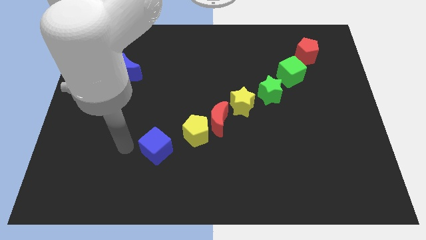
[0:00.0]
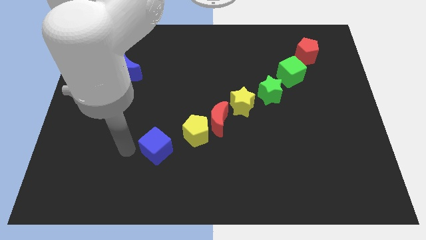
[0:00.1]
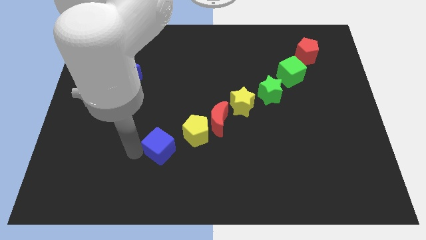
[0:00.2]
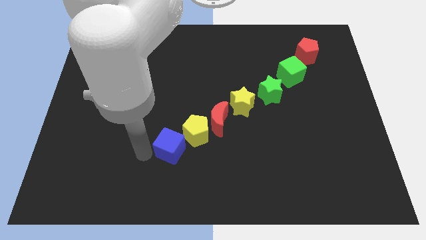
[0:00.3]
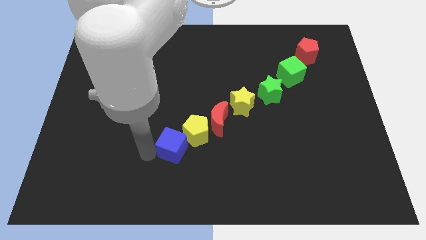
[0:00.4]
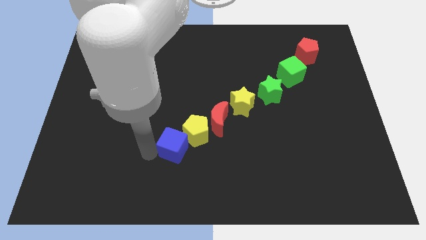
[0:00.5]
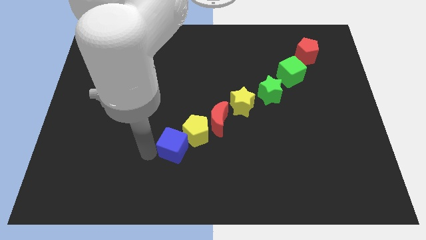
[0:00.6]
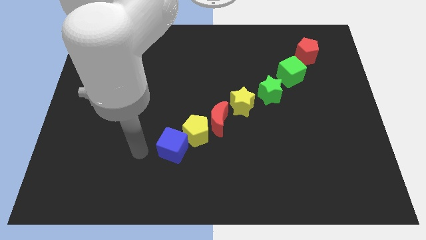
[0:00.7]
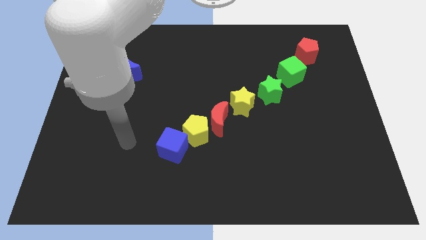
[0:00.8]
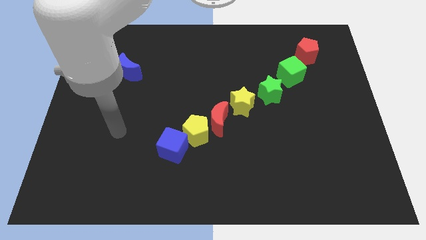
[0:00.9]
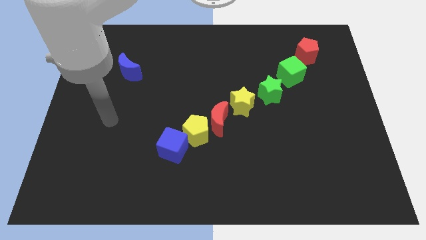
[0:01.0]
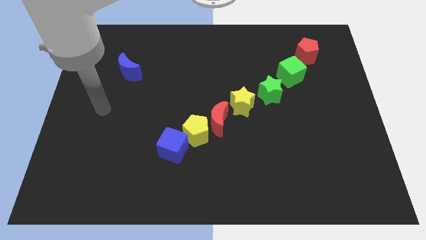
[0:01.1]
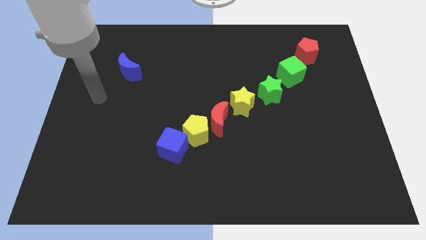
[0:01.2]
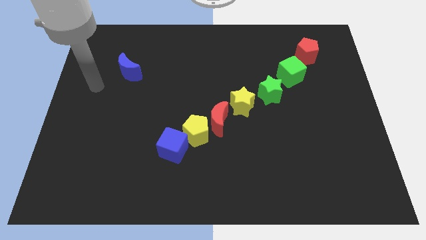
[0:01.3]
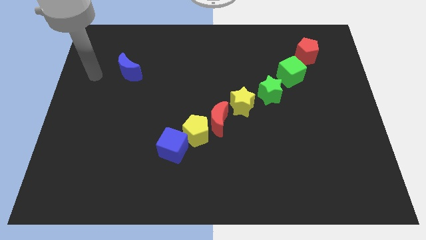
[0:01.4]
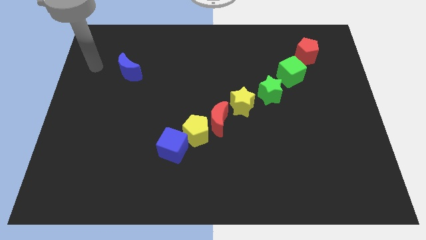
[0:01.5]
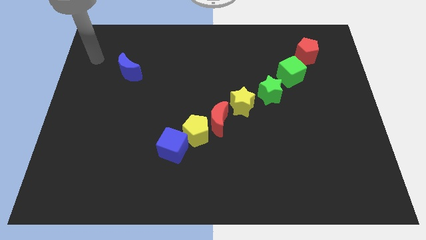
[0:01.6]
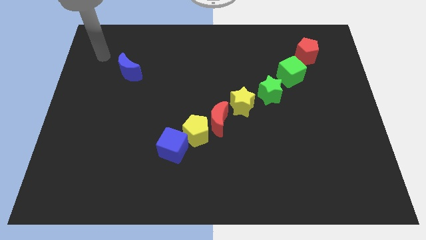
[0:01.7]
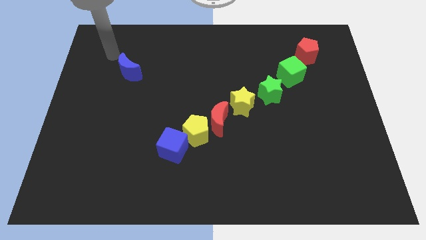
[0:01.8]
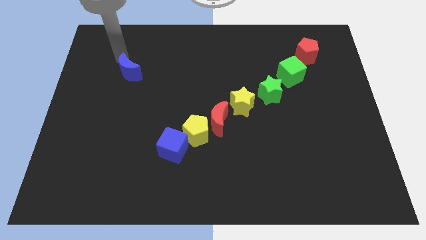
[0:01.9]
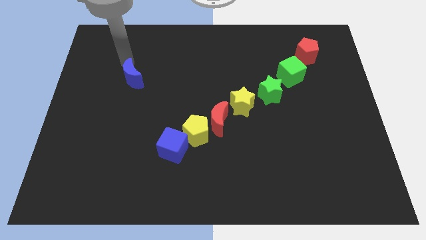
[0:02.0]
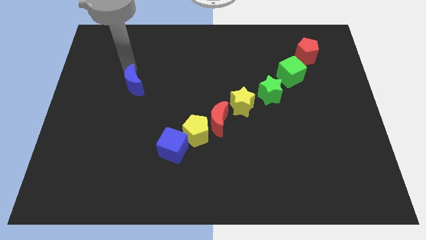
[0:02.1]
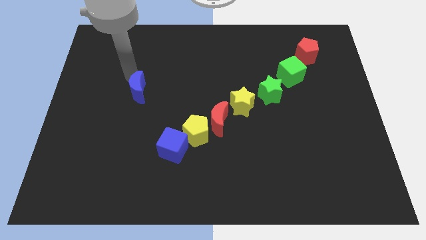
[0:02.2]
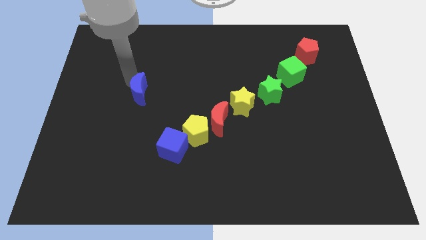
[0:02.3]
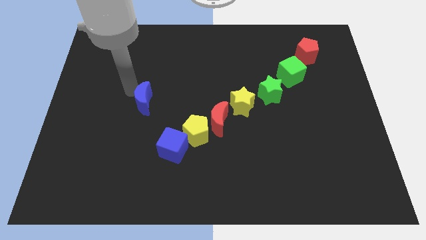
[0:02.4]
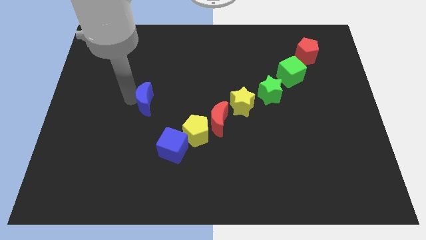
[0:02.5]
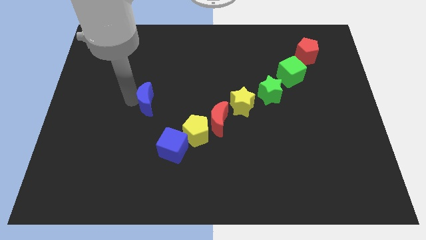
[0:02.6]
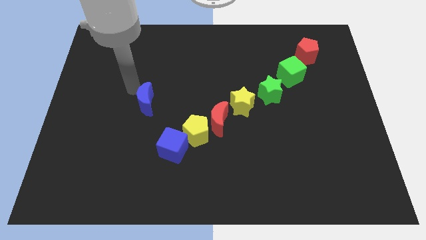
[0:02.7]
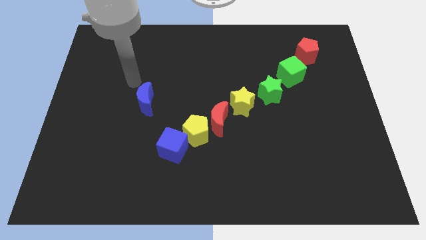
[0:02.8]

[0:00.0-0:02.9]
push blue moon towards blue cube

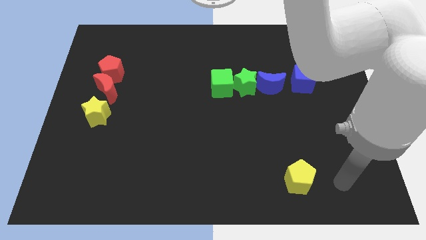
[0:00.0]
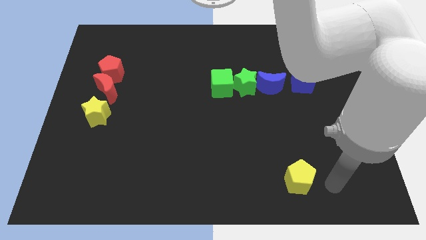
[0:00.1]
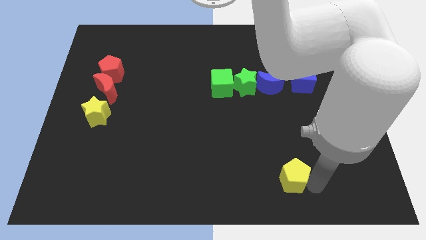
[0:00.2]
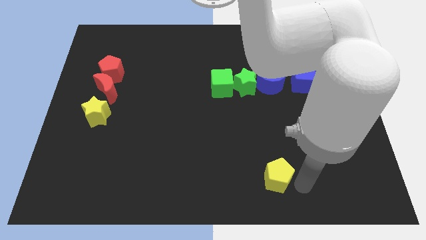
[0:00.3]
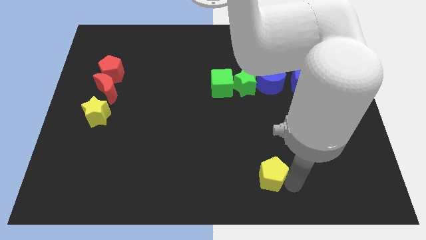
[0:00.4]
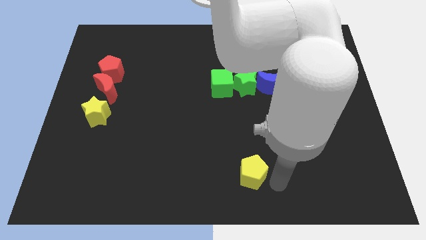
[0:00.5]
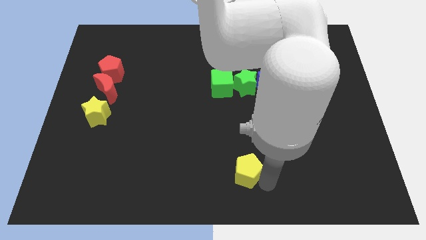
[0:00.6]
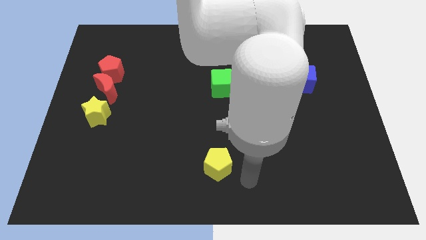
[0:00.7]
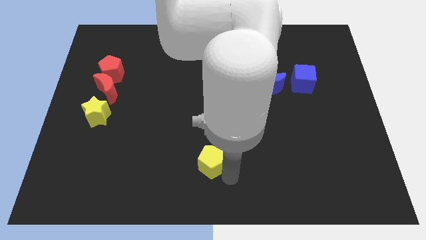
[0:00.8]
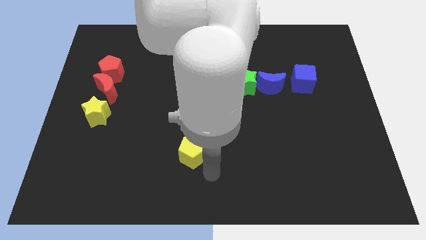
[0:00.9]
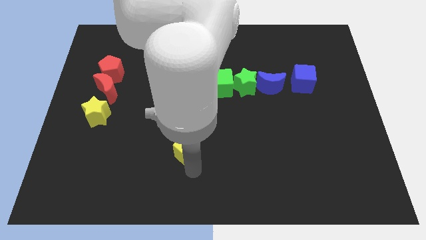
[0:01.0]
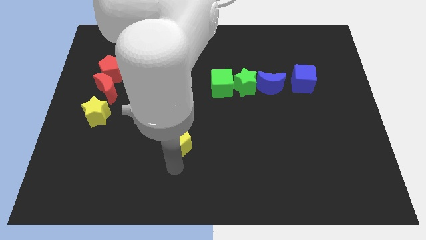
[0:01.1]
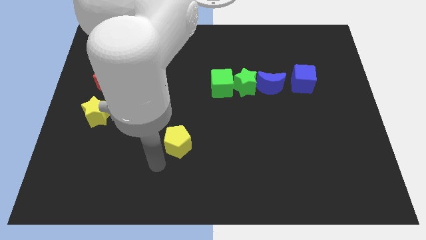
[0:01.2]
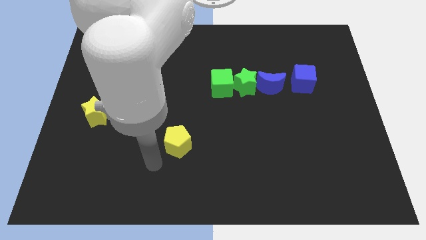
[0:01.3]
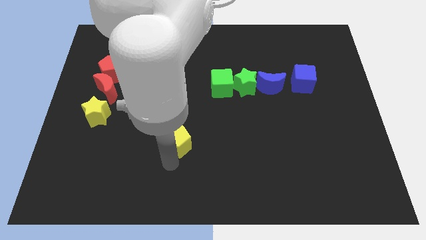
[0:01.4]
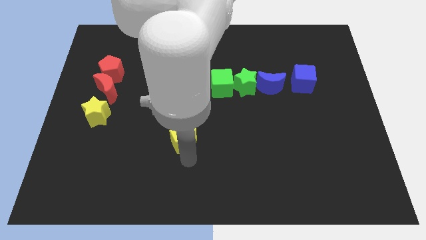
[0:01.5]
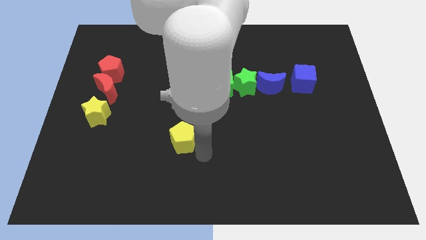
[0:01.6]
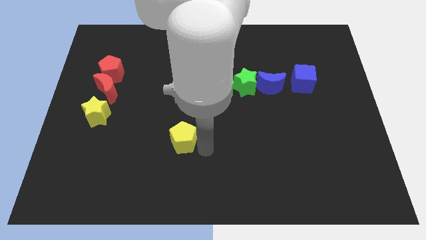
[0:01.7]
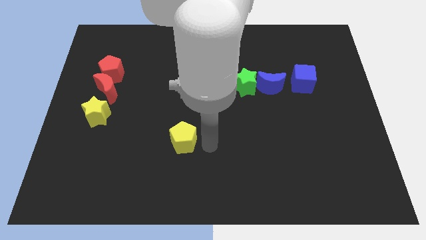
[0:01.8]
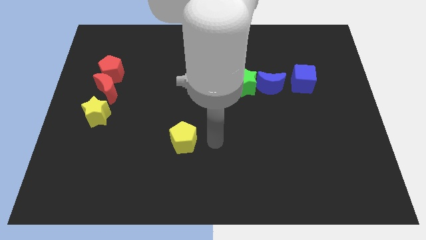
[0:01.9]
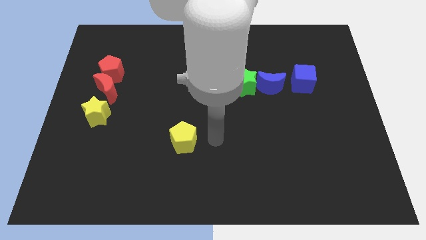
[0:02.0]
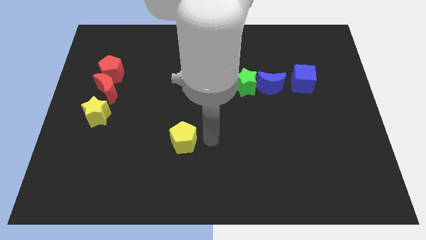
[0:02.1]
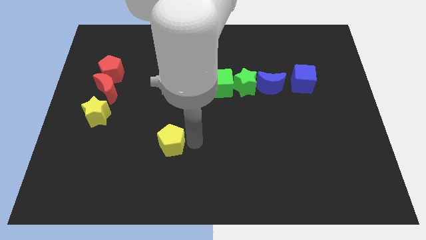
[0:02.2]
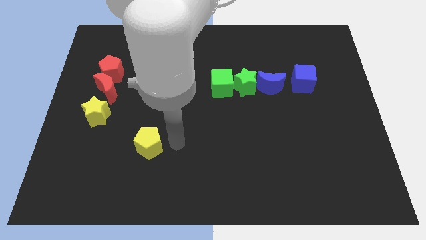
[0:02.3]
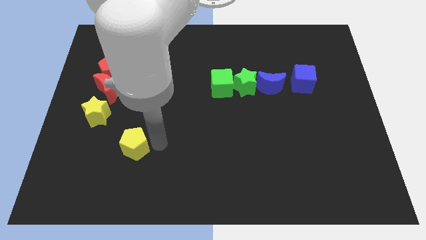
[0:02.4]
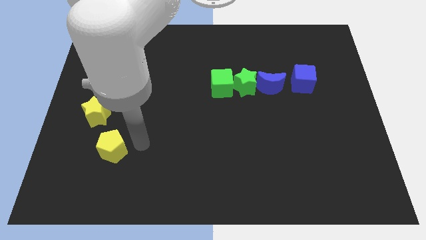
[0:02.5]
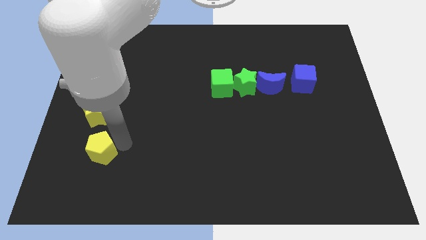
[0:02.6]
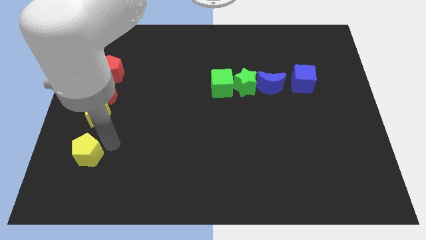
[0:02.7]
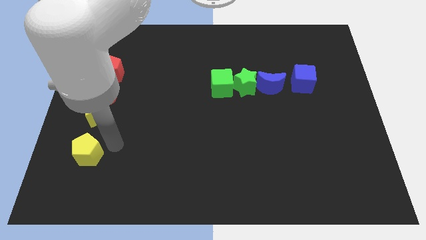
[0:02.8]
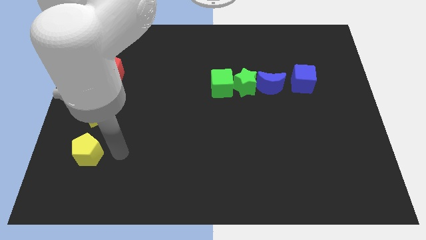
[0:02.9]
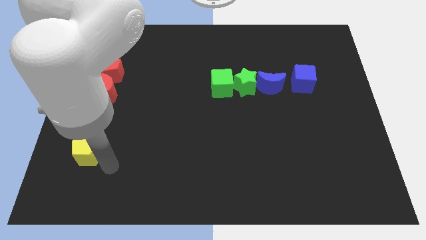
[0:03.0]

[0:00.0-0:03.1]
place yellow pentagon to the bottom of yellow star

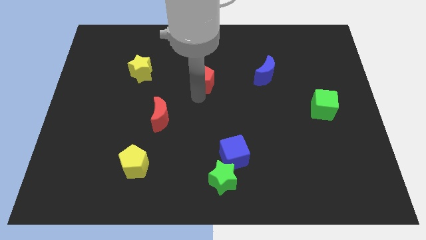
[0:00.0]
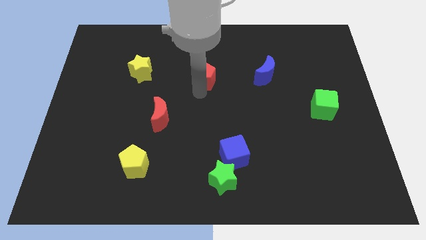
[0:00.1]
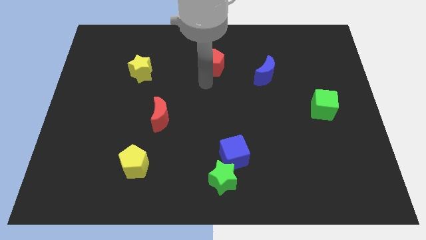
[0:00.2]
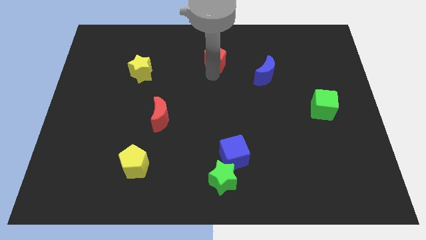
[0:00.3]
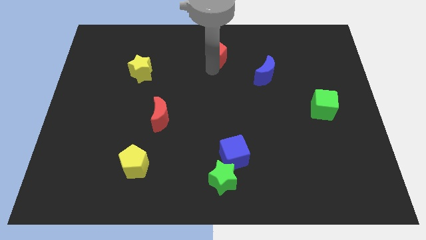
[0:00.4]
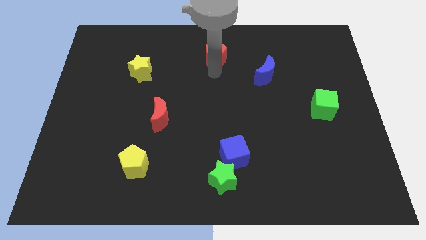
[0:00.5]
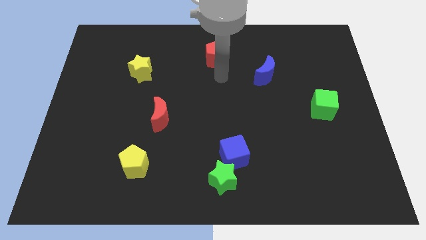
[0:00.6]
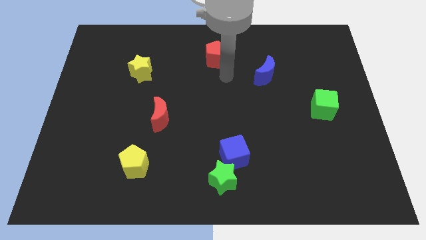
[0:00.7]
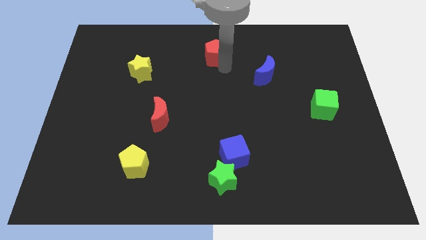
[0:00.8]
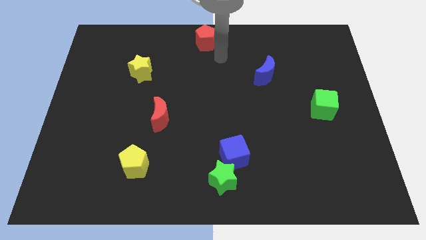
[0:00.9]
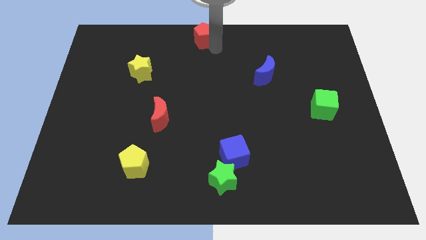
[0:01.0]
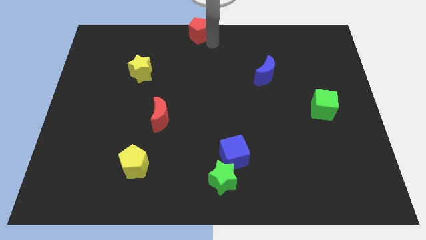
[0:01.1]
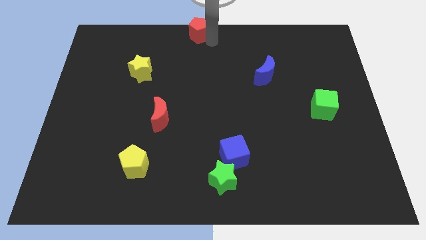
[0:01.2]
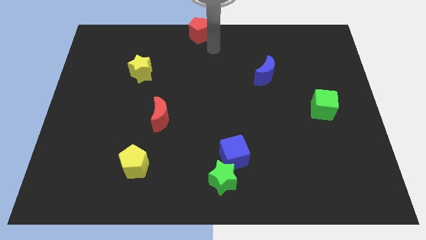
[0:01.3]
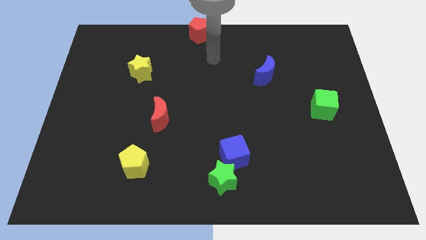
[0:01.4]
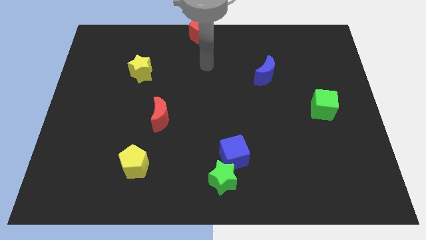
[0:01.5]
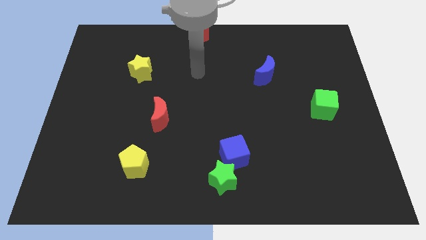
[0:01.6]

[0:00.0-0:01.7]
move the red pentagon to the top middle of the board

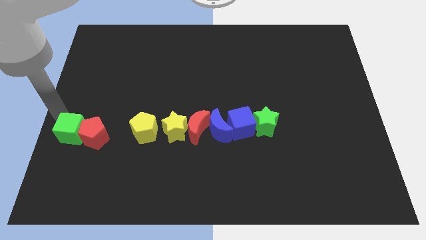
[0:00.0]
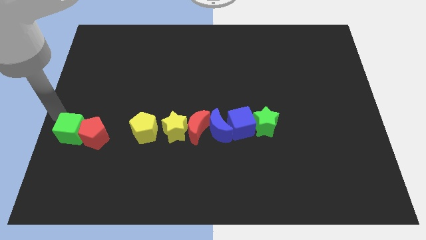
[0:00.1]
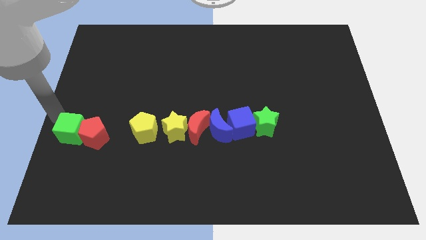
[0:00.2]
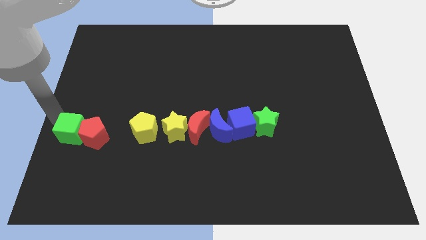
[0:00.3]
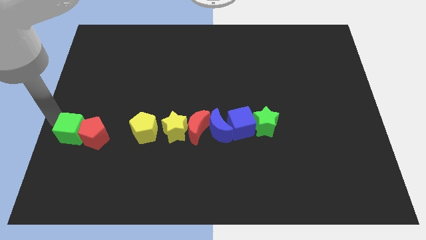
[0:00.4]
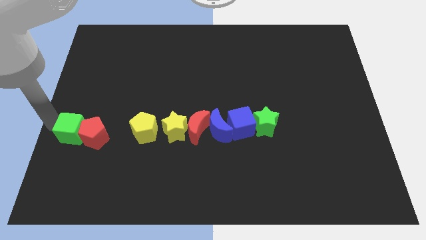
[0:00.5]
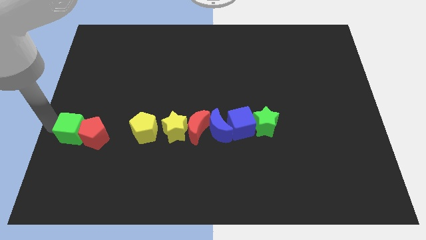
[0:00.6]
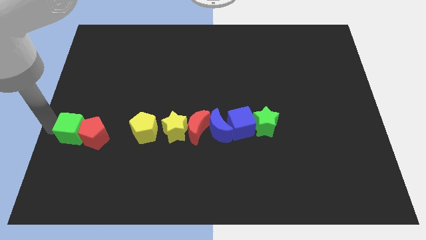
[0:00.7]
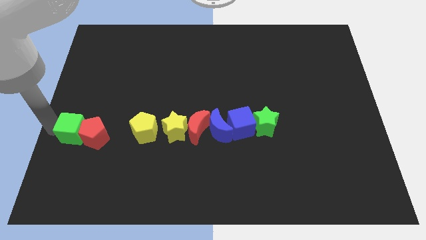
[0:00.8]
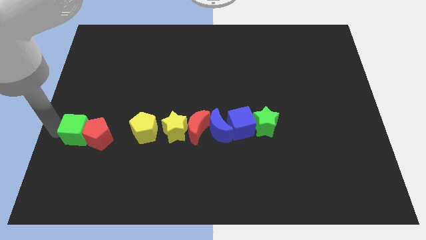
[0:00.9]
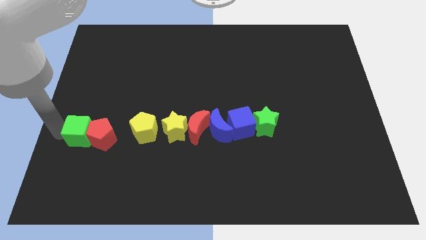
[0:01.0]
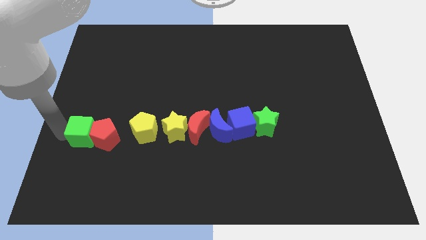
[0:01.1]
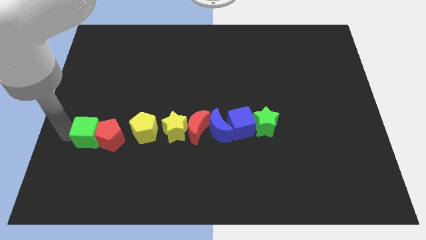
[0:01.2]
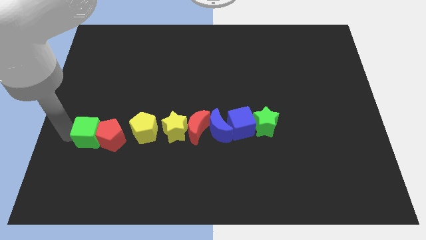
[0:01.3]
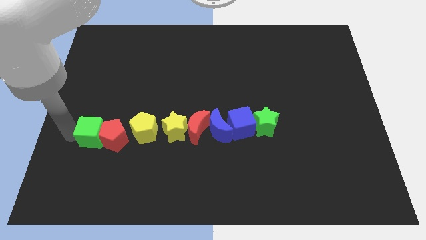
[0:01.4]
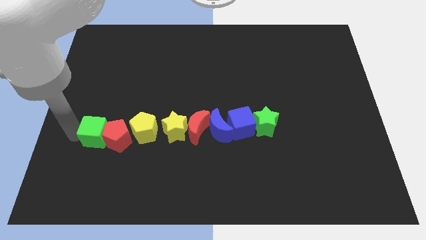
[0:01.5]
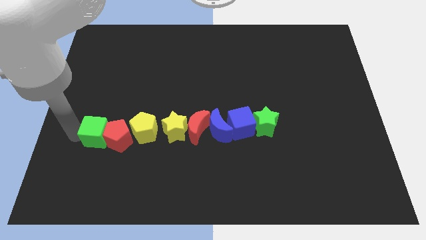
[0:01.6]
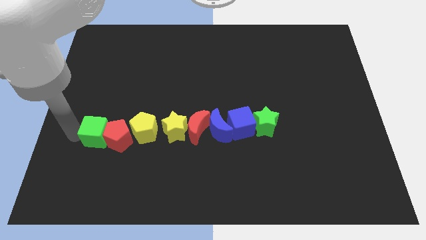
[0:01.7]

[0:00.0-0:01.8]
move the green cube into the blocks to make a line
